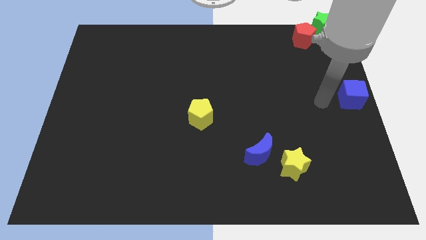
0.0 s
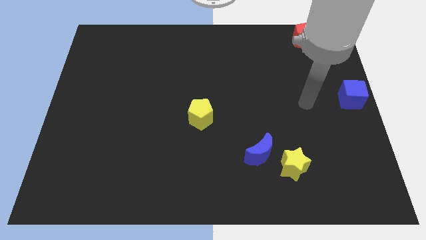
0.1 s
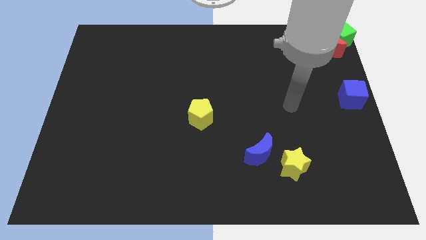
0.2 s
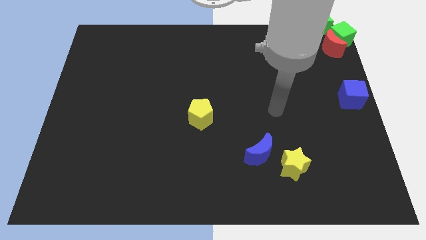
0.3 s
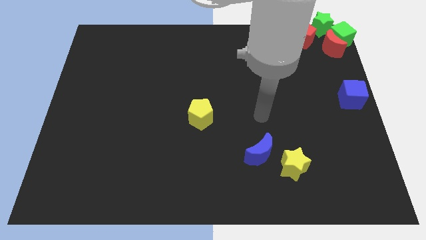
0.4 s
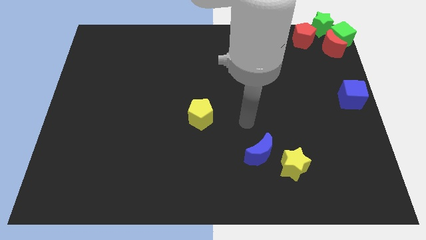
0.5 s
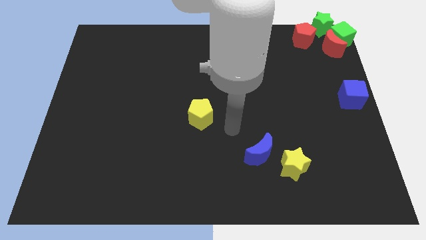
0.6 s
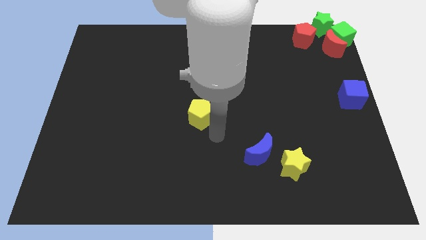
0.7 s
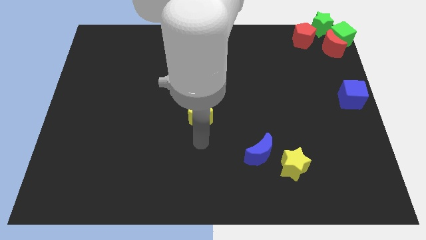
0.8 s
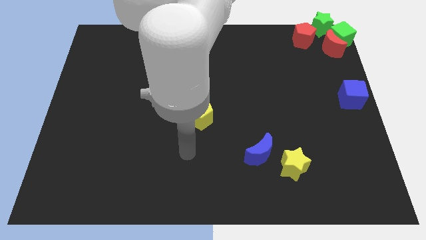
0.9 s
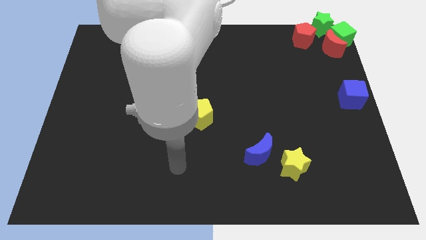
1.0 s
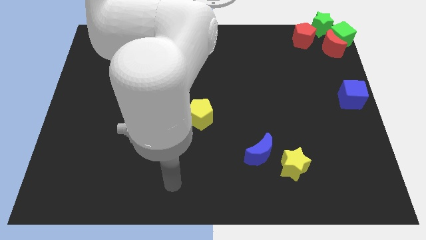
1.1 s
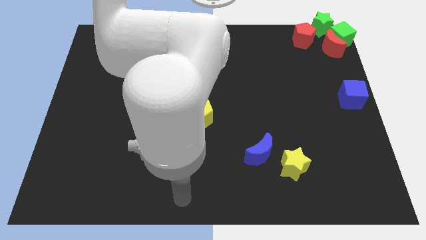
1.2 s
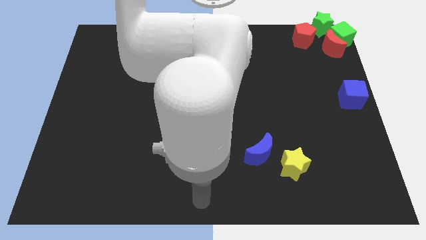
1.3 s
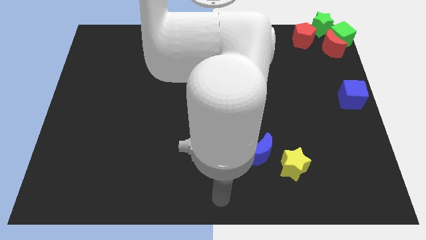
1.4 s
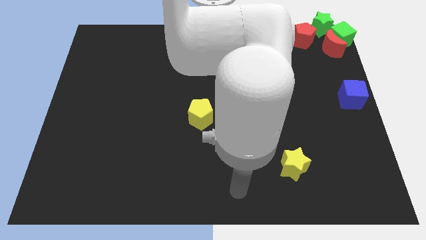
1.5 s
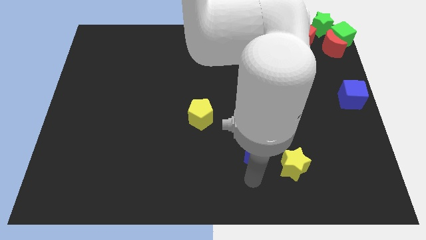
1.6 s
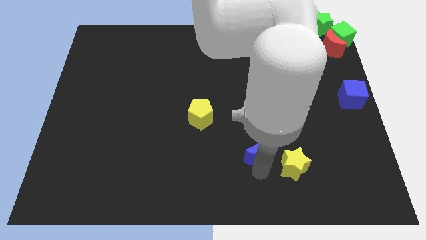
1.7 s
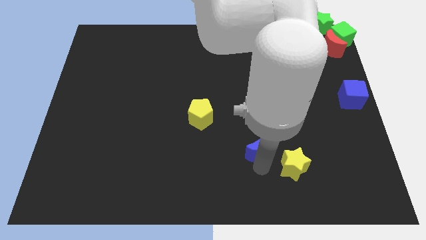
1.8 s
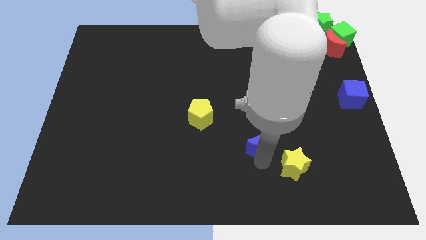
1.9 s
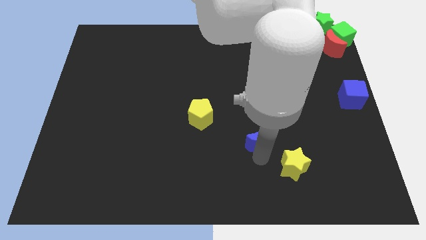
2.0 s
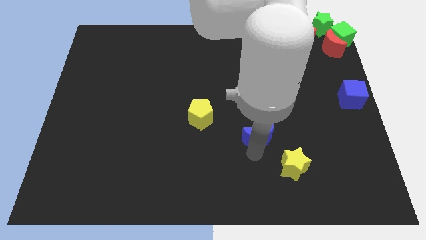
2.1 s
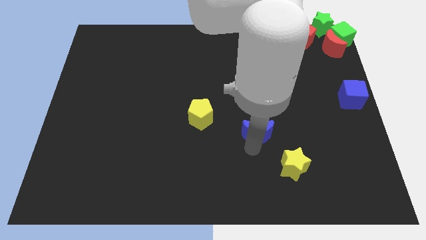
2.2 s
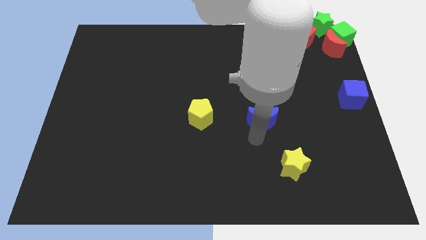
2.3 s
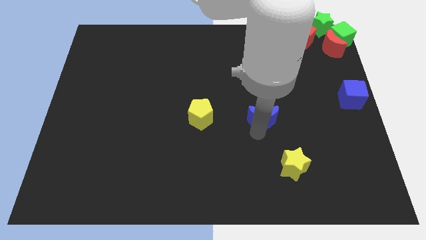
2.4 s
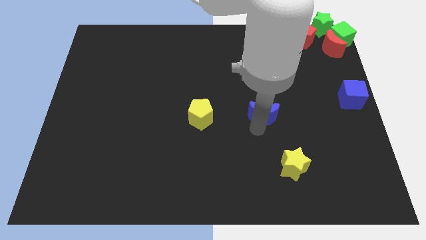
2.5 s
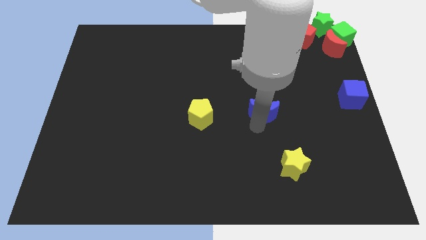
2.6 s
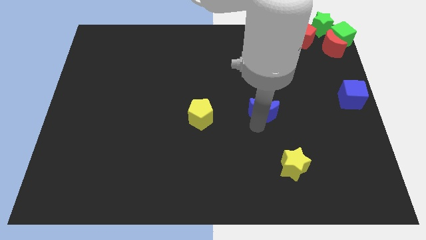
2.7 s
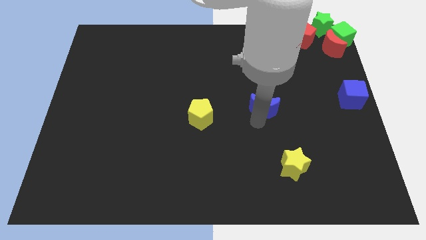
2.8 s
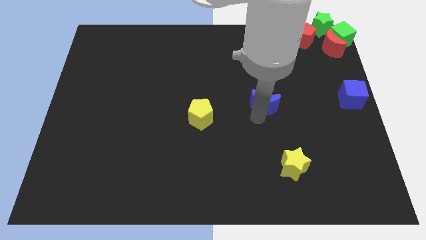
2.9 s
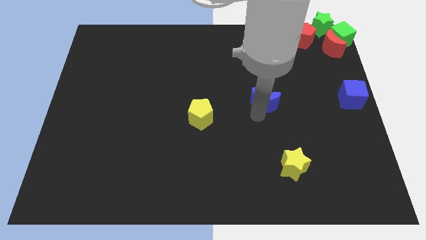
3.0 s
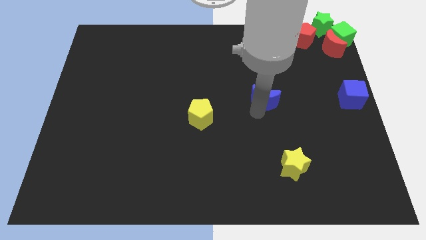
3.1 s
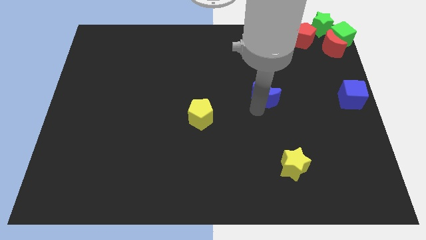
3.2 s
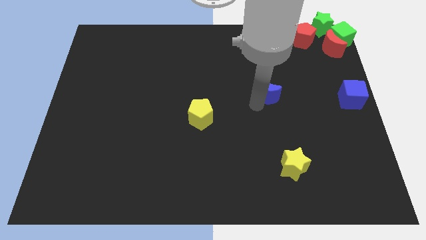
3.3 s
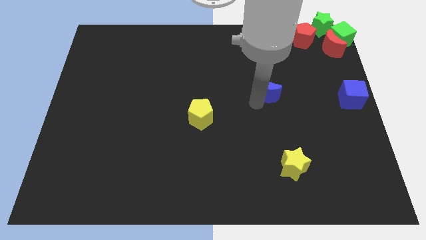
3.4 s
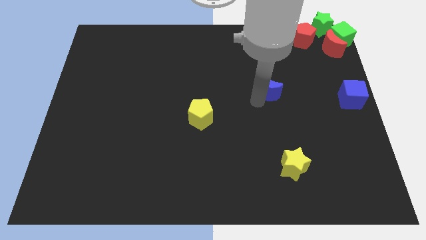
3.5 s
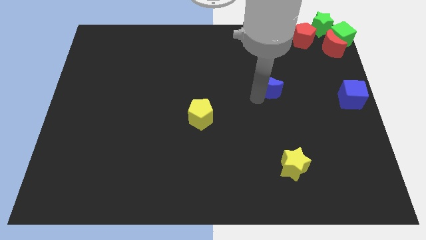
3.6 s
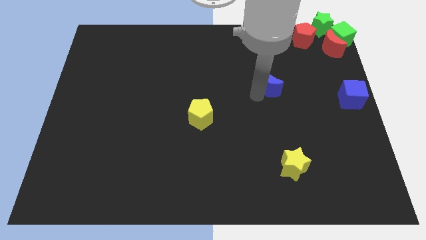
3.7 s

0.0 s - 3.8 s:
move the blue cube upwards

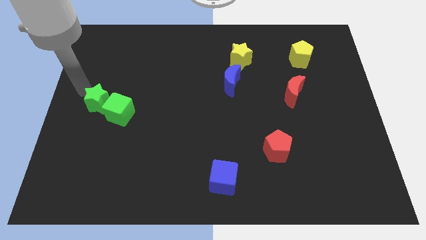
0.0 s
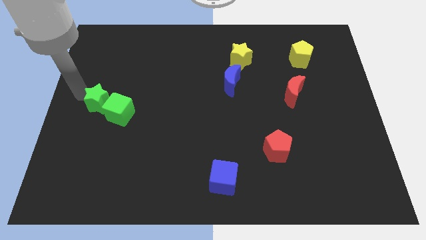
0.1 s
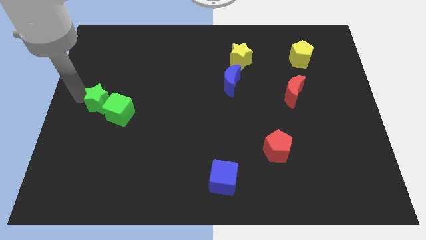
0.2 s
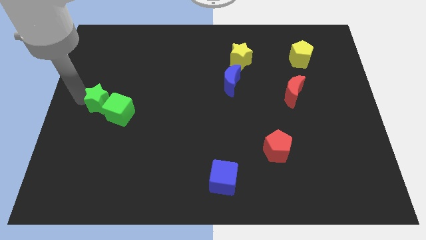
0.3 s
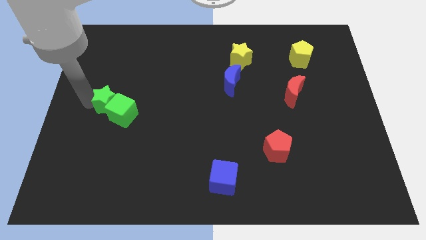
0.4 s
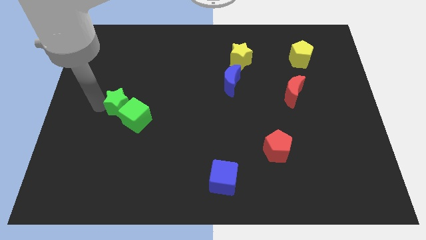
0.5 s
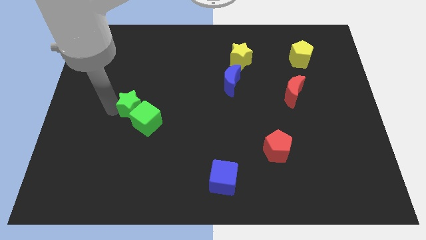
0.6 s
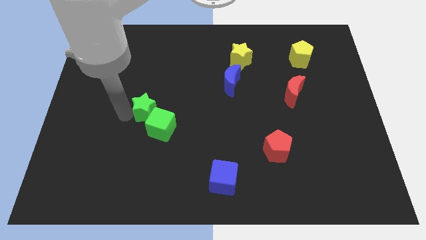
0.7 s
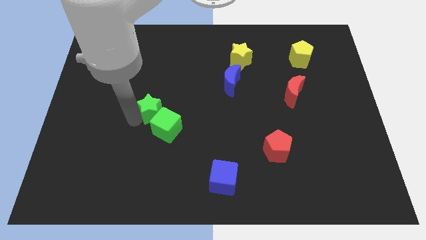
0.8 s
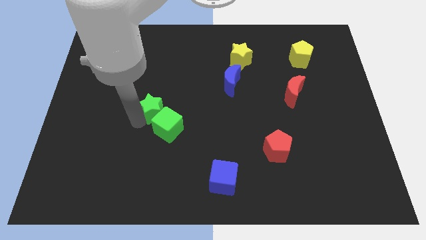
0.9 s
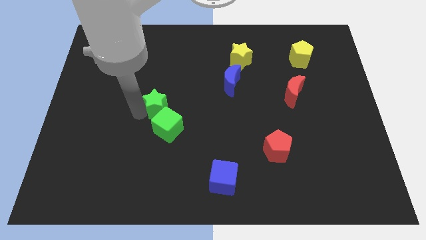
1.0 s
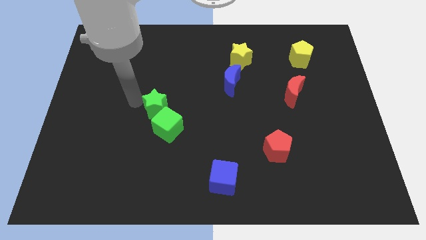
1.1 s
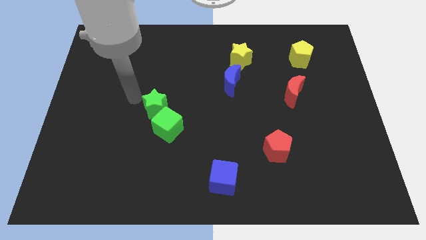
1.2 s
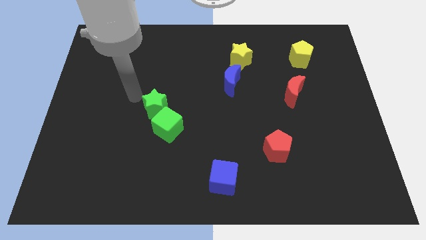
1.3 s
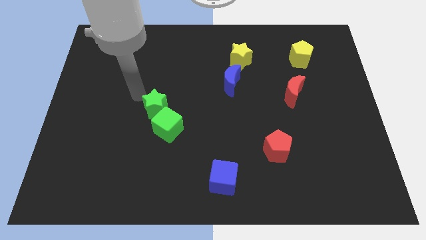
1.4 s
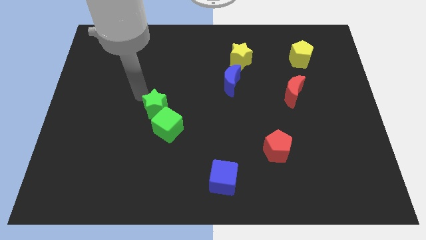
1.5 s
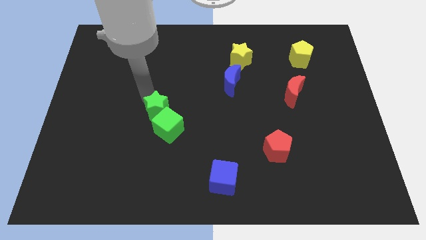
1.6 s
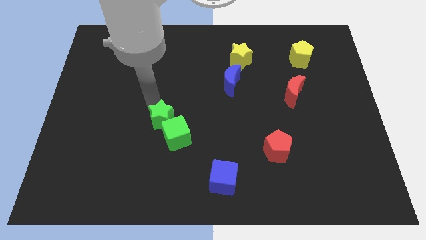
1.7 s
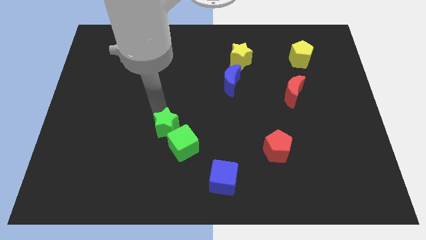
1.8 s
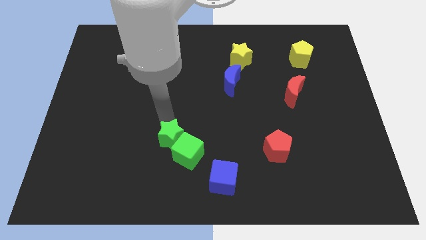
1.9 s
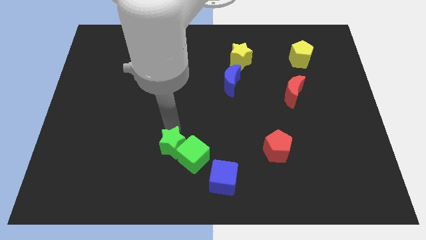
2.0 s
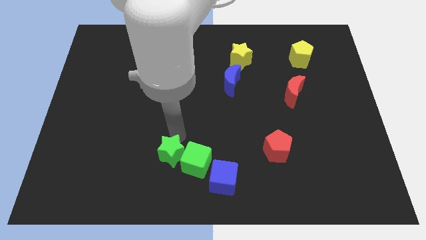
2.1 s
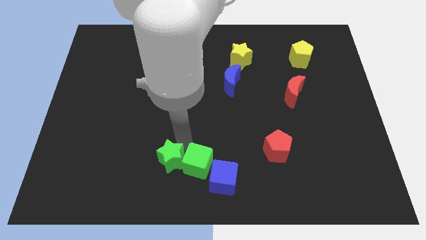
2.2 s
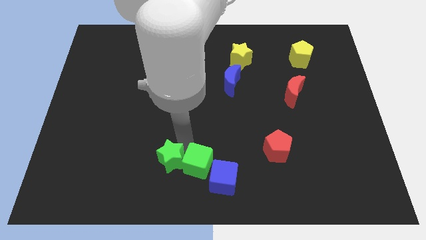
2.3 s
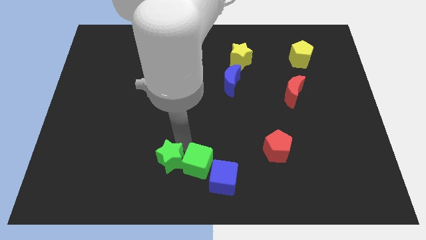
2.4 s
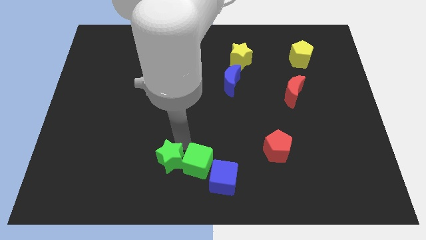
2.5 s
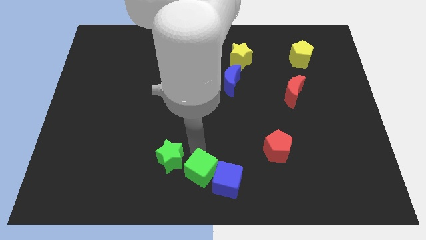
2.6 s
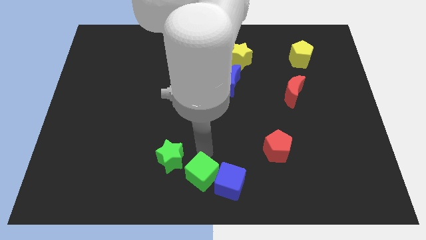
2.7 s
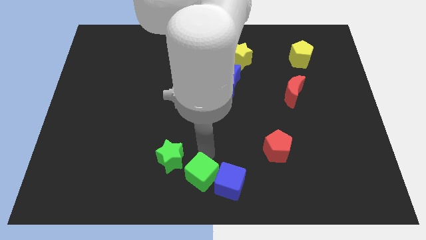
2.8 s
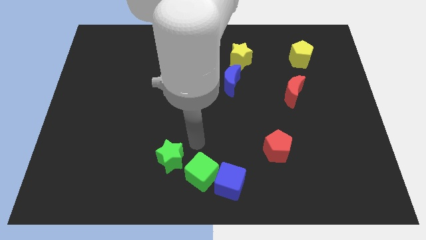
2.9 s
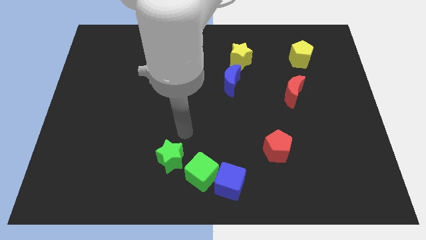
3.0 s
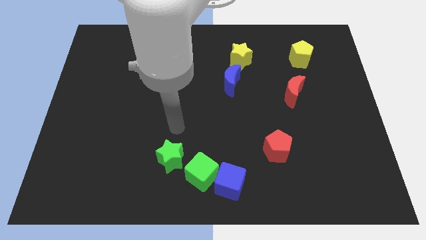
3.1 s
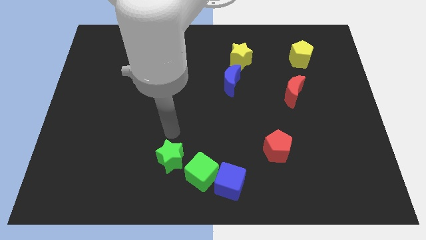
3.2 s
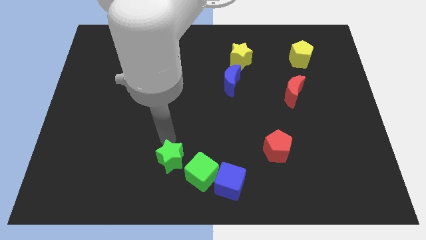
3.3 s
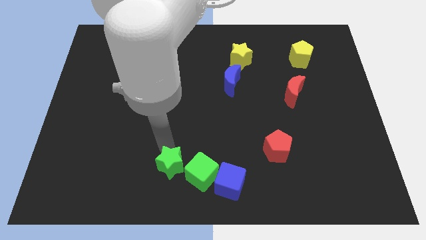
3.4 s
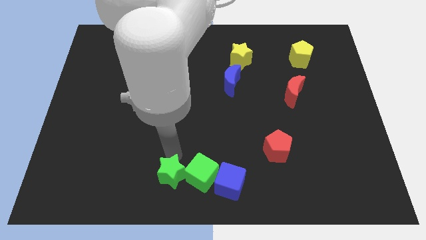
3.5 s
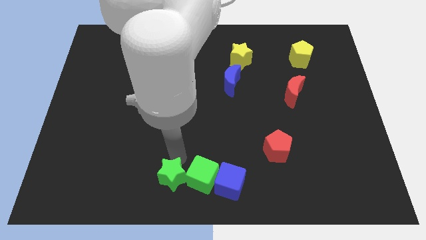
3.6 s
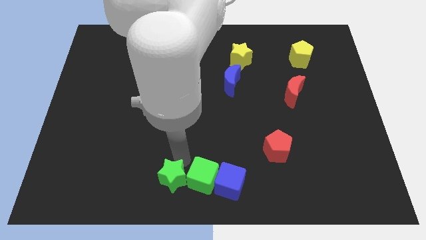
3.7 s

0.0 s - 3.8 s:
push the green blocks to the left of the blue cube

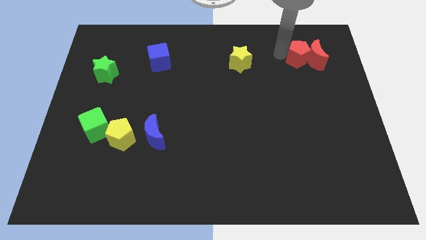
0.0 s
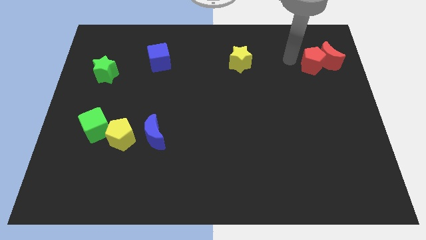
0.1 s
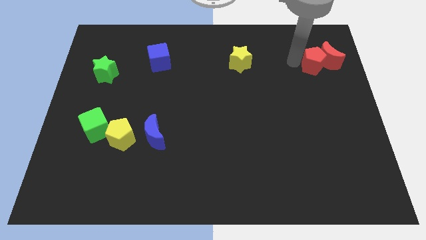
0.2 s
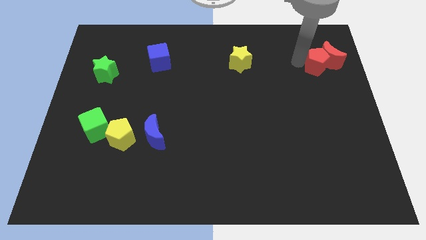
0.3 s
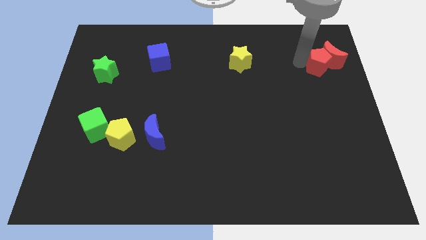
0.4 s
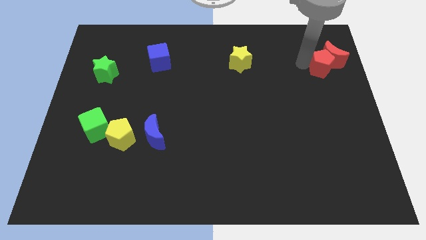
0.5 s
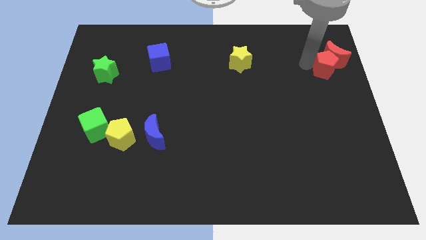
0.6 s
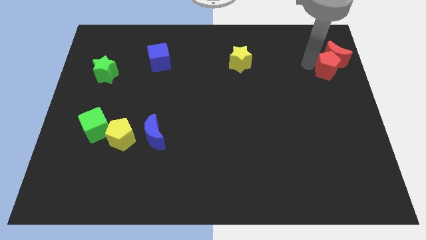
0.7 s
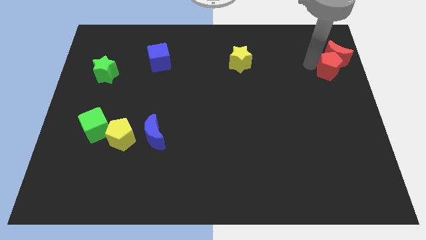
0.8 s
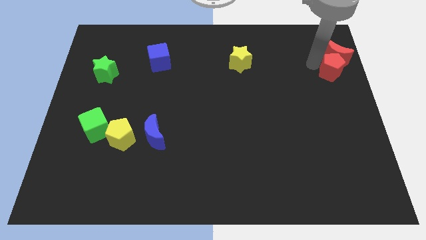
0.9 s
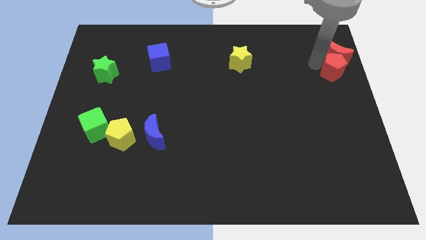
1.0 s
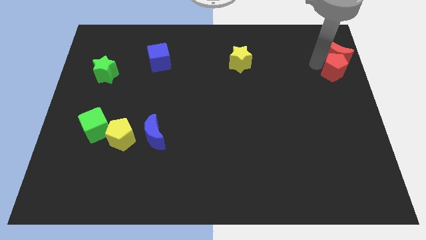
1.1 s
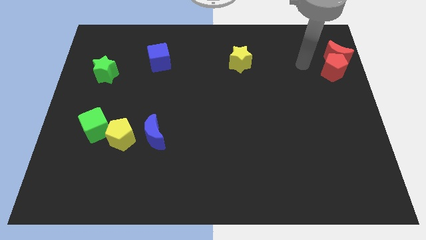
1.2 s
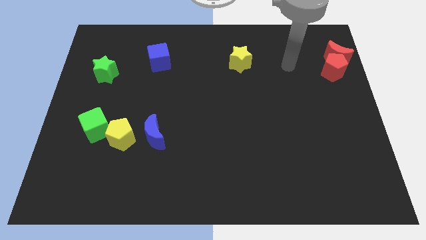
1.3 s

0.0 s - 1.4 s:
push red moon to the right side of the board with red pentagon
